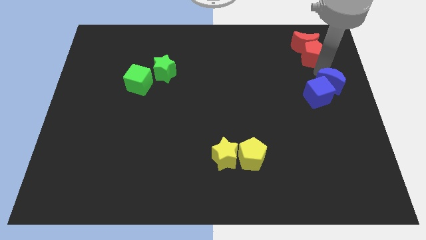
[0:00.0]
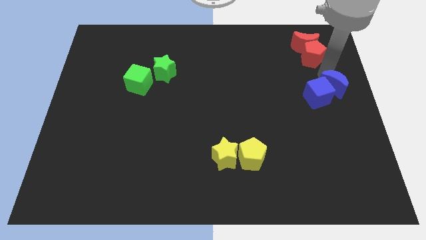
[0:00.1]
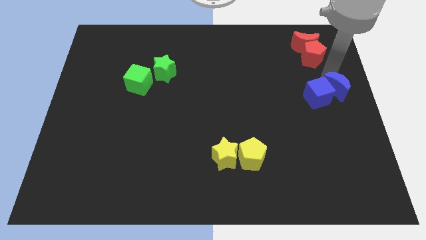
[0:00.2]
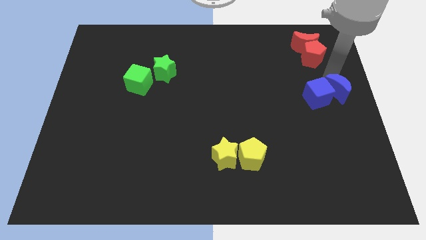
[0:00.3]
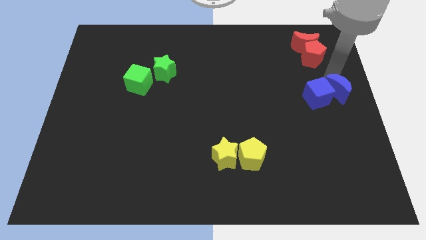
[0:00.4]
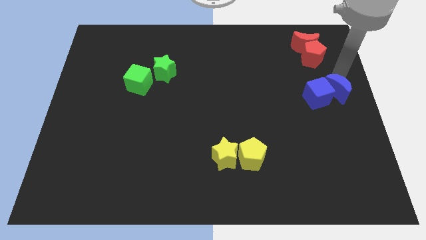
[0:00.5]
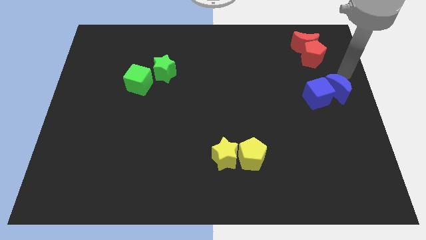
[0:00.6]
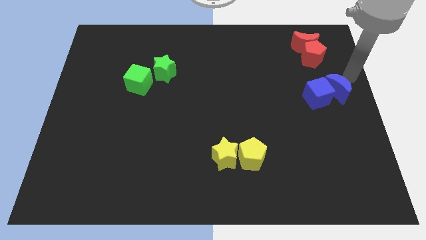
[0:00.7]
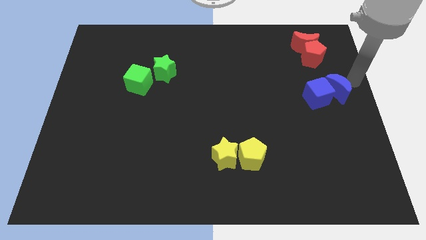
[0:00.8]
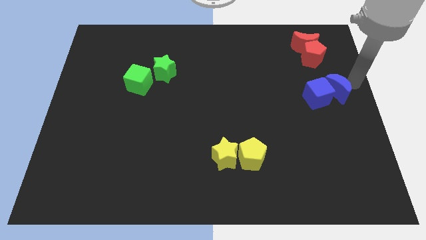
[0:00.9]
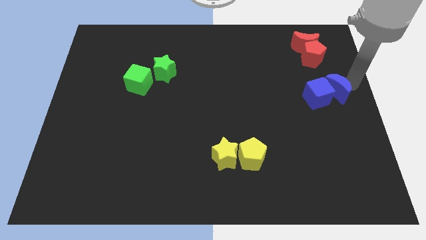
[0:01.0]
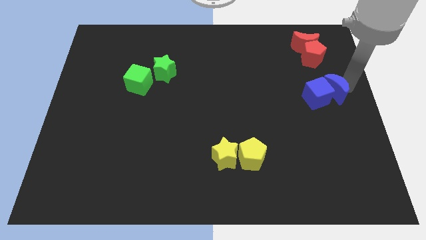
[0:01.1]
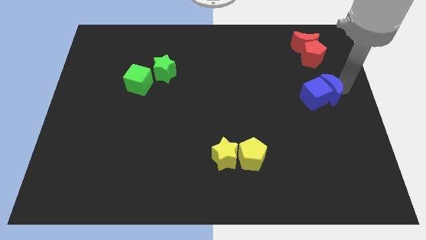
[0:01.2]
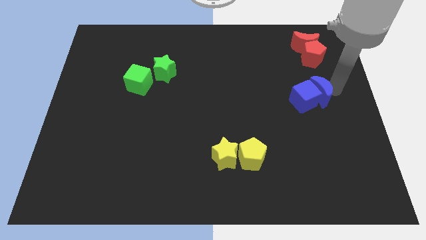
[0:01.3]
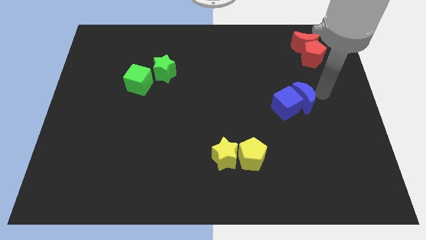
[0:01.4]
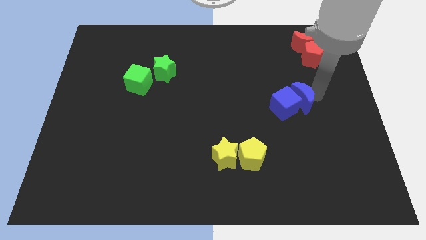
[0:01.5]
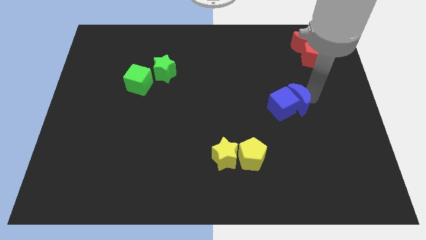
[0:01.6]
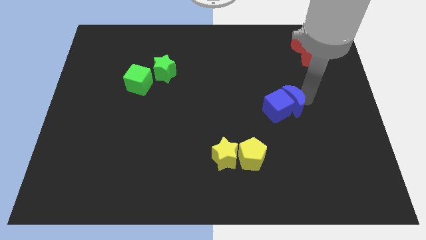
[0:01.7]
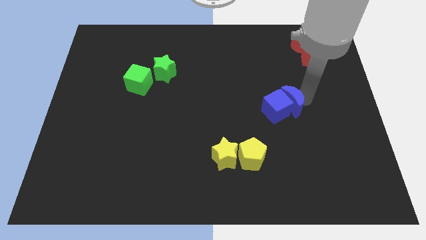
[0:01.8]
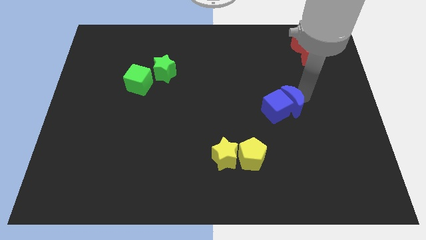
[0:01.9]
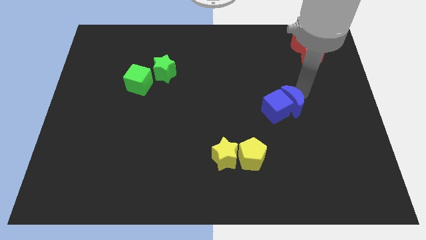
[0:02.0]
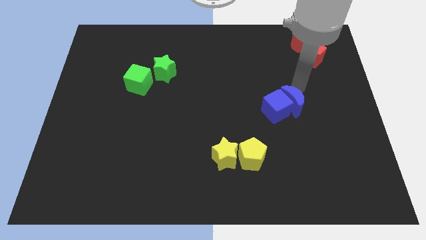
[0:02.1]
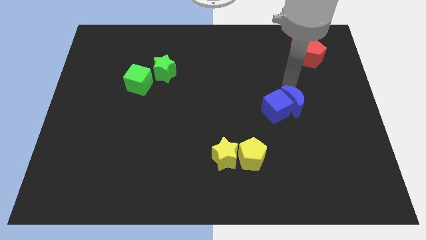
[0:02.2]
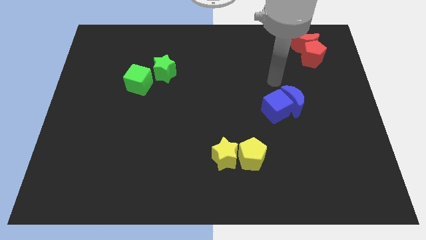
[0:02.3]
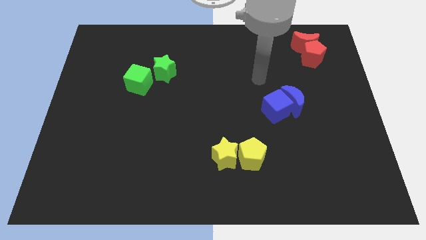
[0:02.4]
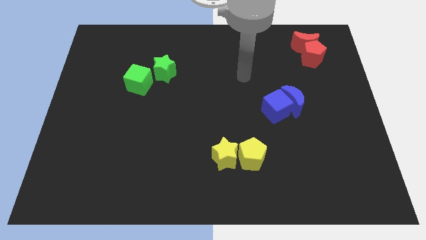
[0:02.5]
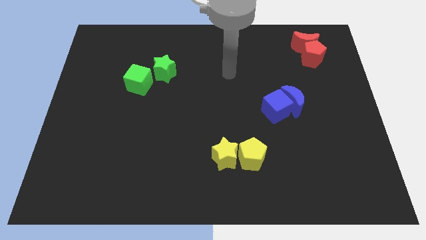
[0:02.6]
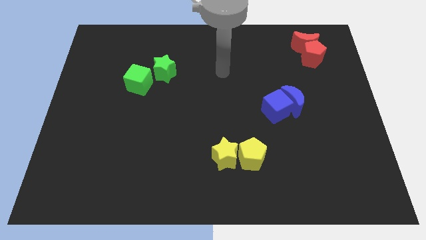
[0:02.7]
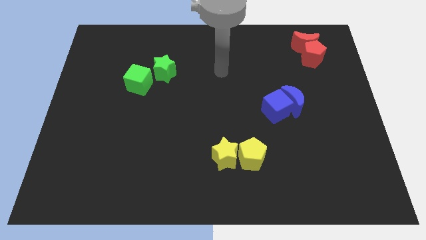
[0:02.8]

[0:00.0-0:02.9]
move blue blocks right above the yellow blocks

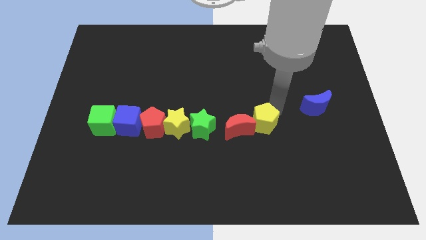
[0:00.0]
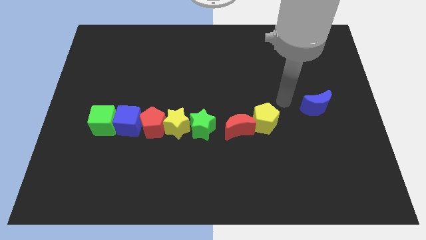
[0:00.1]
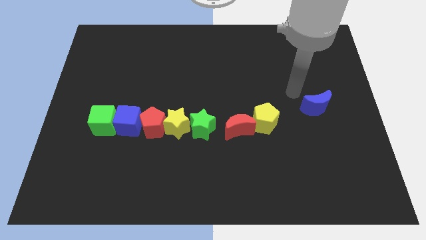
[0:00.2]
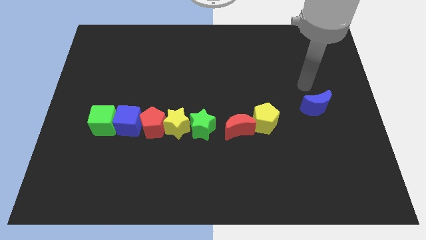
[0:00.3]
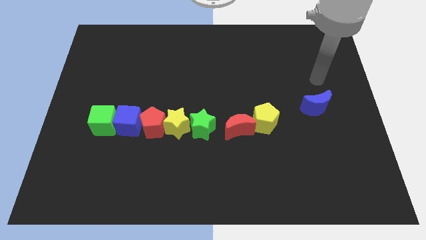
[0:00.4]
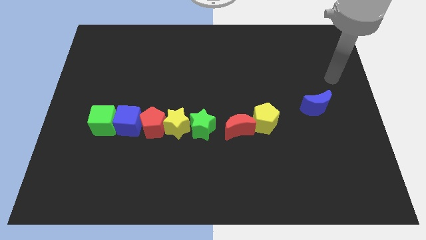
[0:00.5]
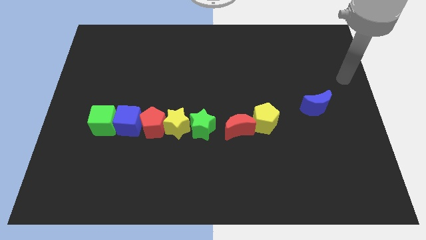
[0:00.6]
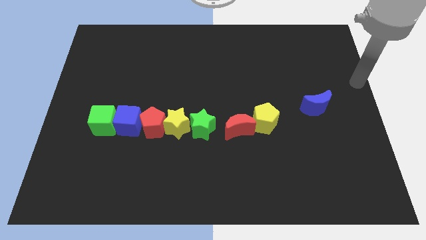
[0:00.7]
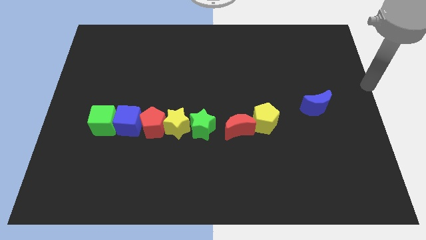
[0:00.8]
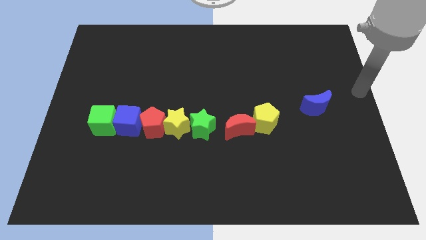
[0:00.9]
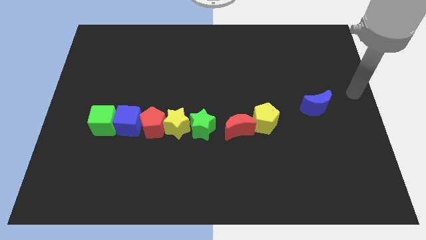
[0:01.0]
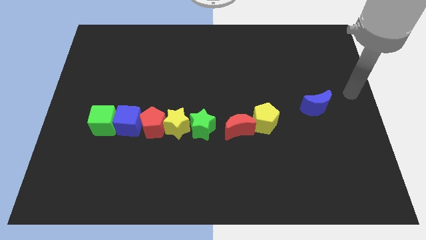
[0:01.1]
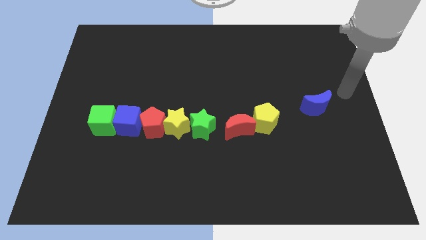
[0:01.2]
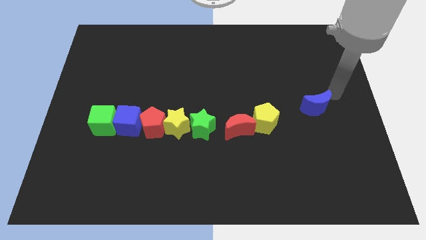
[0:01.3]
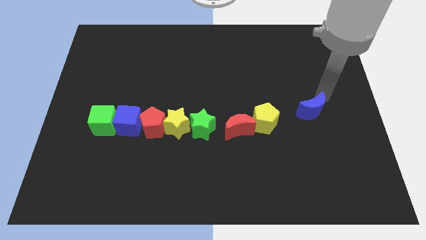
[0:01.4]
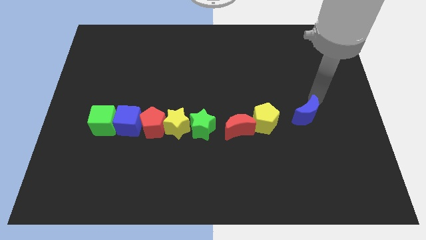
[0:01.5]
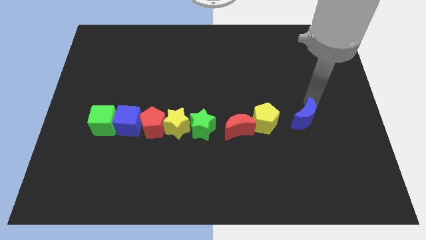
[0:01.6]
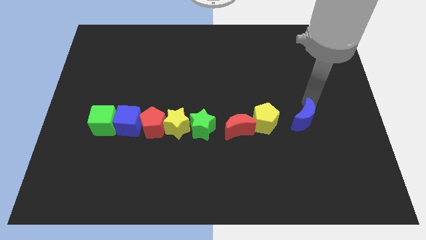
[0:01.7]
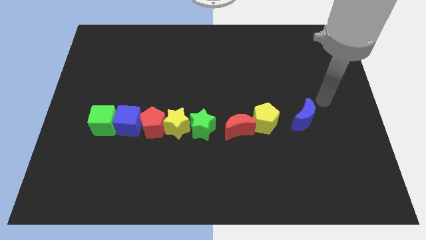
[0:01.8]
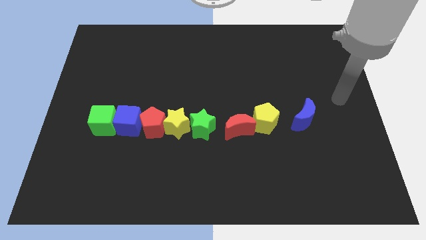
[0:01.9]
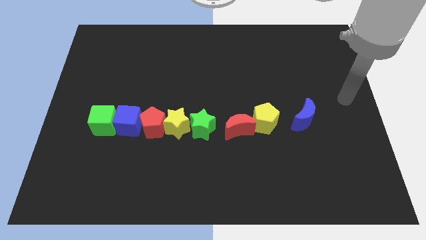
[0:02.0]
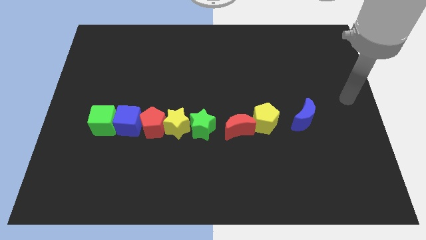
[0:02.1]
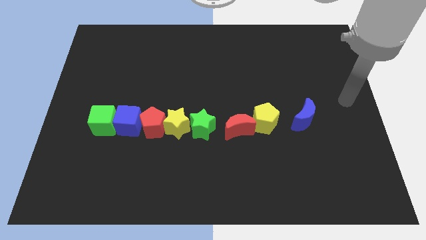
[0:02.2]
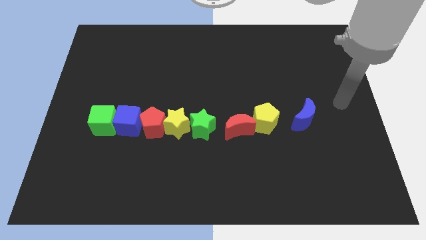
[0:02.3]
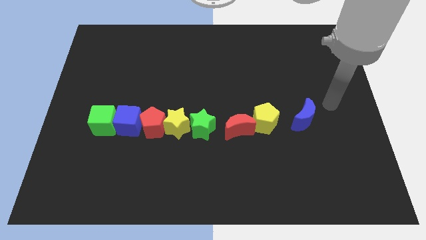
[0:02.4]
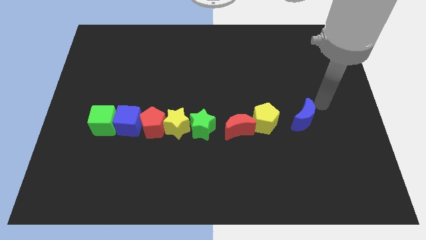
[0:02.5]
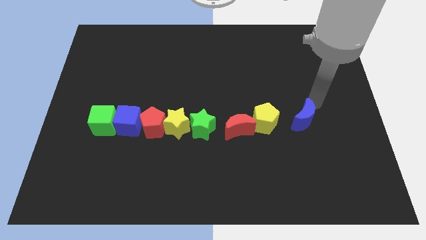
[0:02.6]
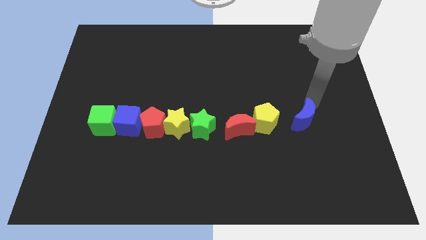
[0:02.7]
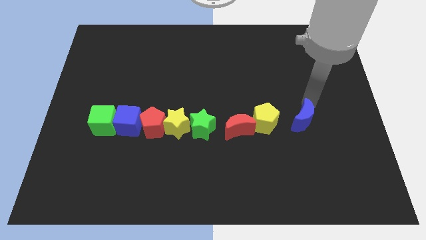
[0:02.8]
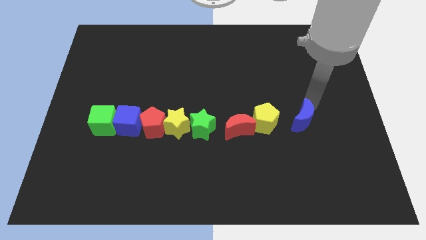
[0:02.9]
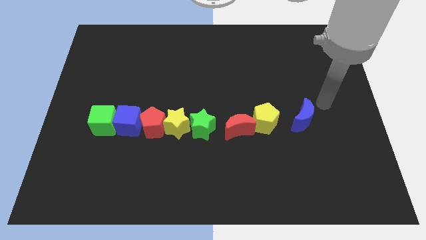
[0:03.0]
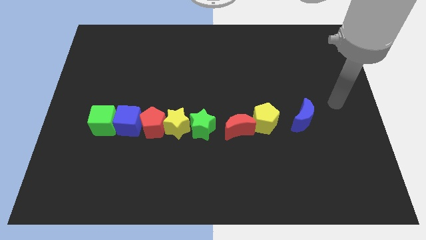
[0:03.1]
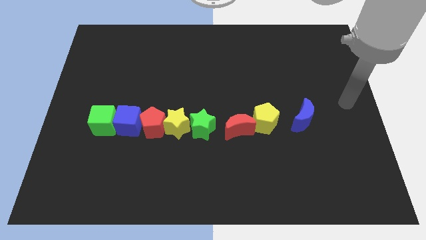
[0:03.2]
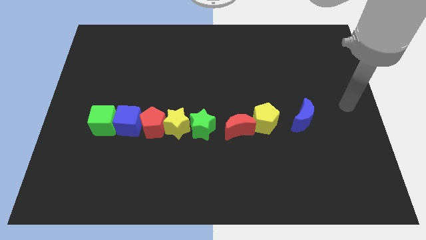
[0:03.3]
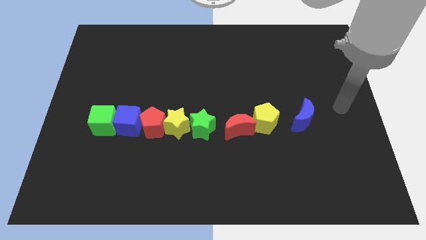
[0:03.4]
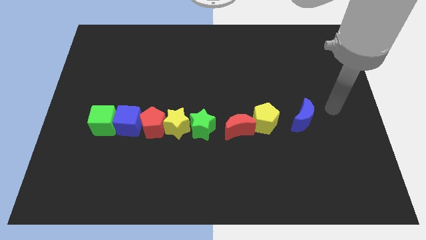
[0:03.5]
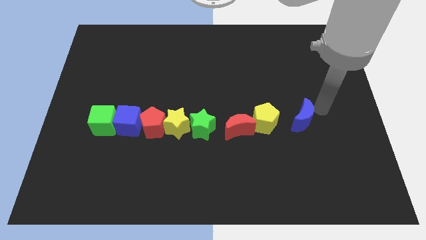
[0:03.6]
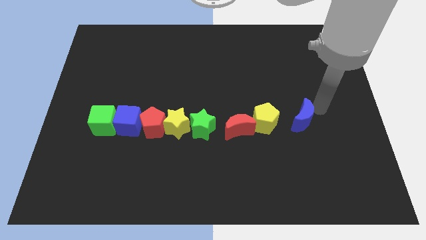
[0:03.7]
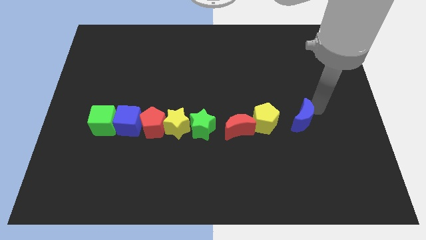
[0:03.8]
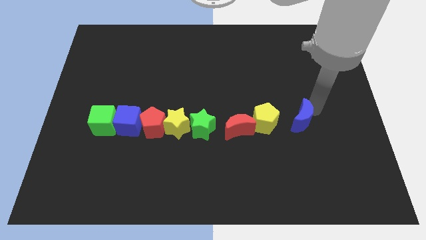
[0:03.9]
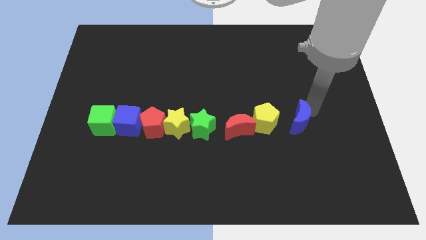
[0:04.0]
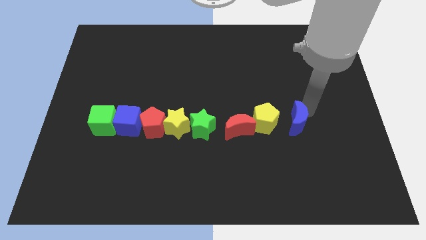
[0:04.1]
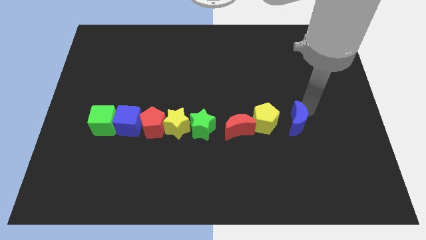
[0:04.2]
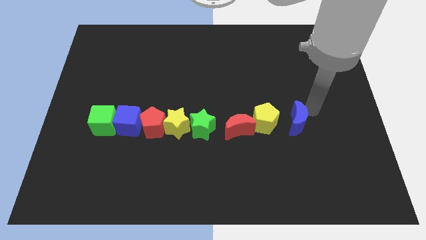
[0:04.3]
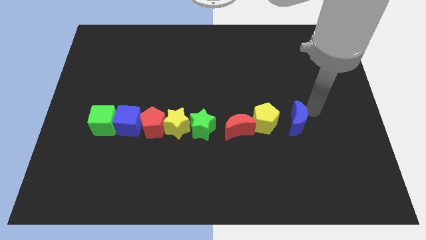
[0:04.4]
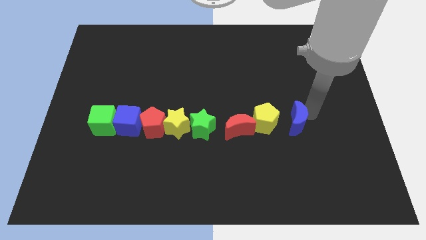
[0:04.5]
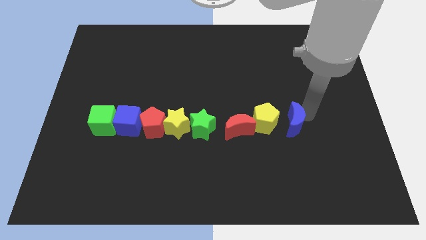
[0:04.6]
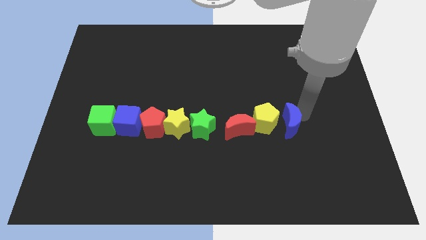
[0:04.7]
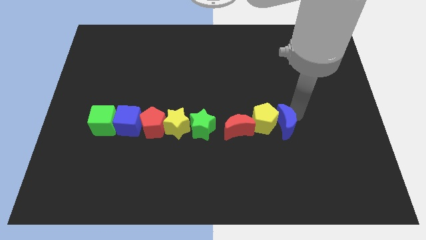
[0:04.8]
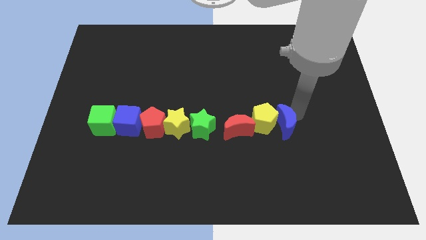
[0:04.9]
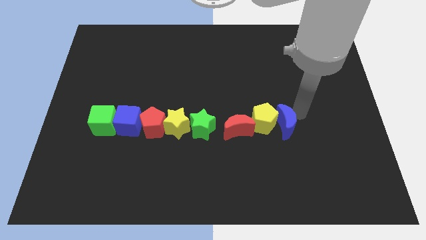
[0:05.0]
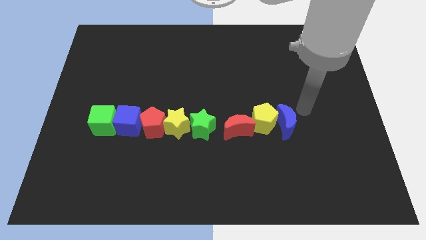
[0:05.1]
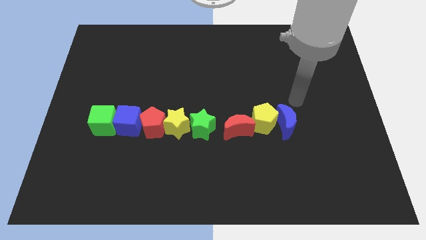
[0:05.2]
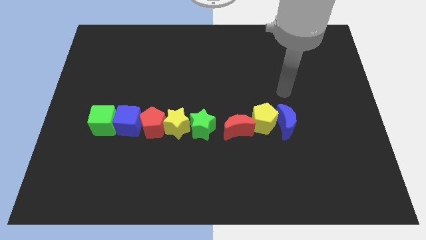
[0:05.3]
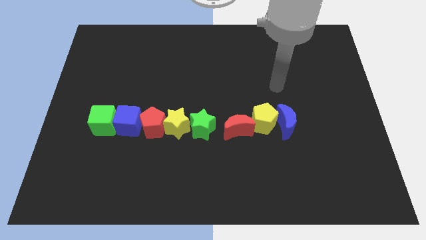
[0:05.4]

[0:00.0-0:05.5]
push the blue crescent into the yellow pentagon

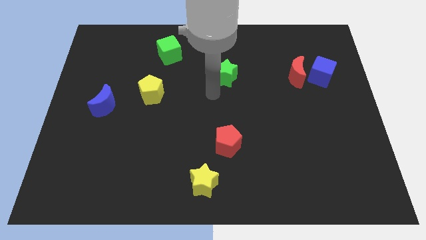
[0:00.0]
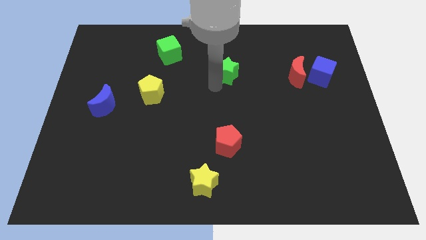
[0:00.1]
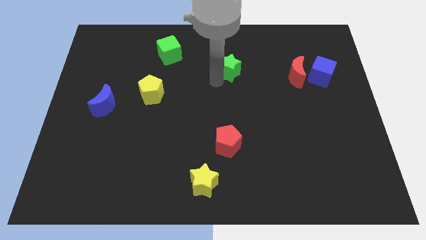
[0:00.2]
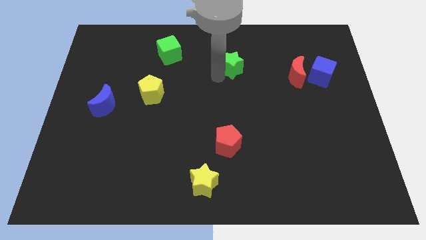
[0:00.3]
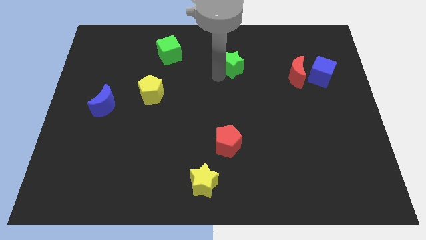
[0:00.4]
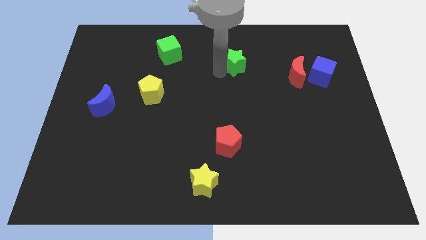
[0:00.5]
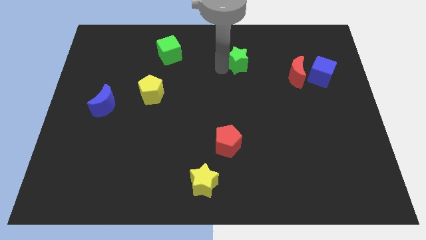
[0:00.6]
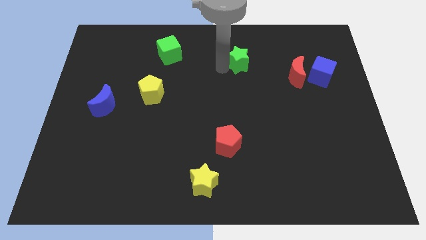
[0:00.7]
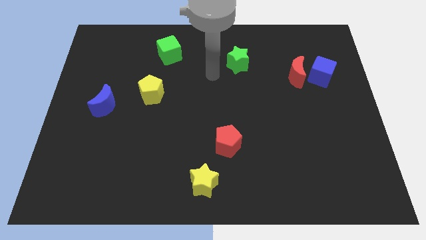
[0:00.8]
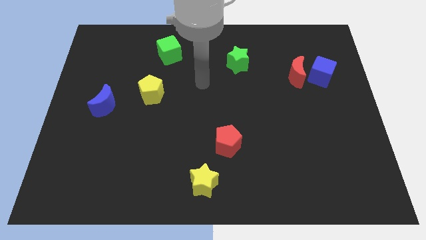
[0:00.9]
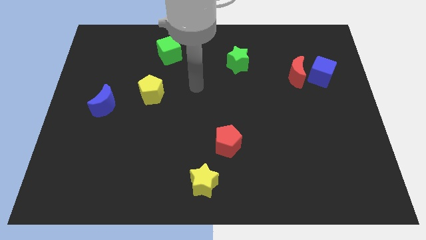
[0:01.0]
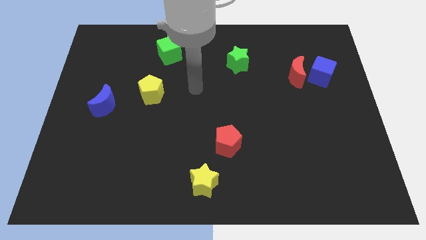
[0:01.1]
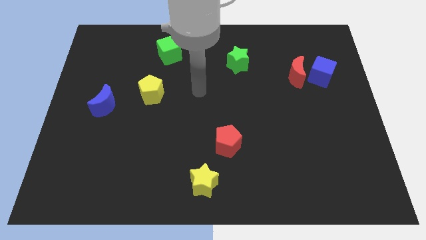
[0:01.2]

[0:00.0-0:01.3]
push the green star towards the top center of the board
